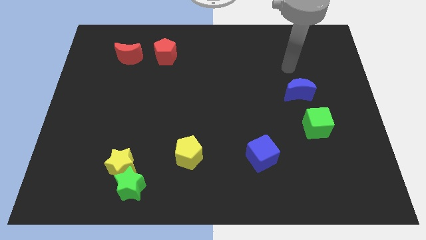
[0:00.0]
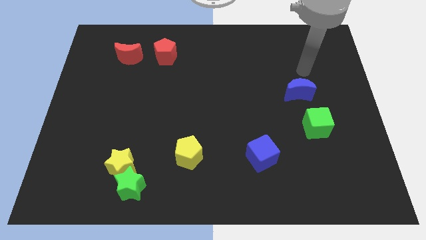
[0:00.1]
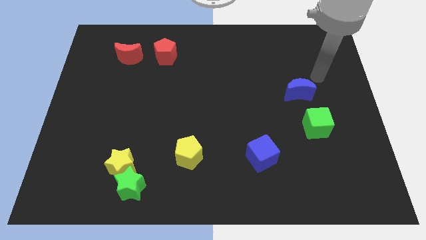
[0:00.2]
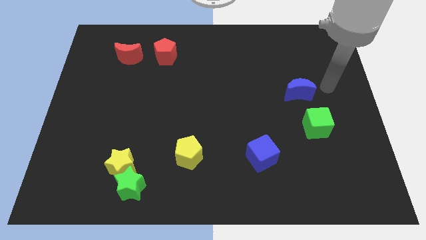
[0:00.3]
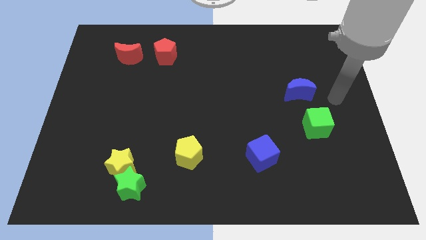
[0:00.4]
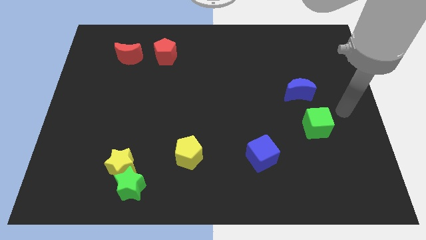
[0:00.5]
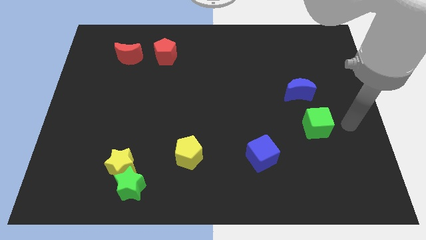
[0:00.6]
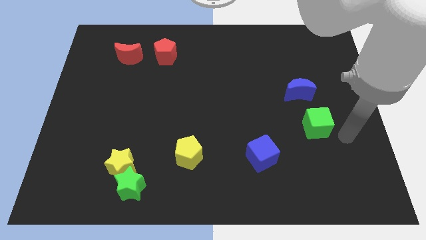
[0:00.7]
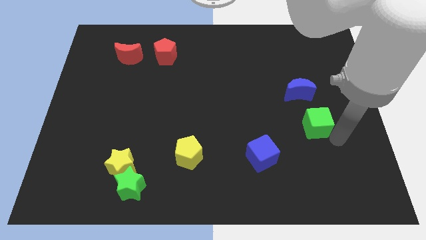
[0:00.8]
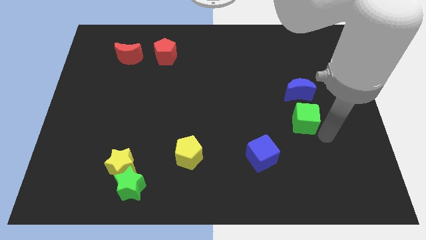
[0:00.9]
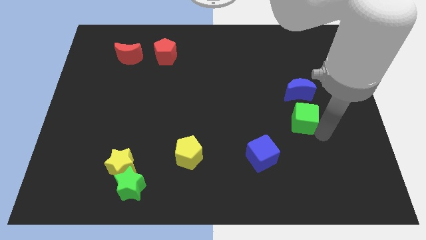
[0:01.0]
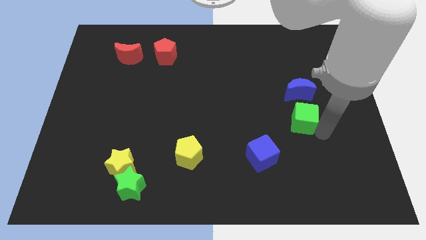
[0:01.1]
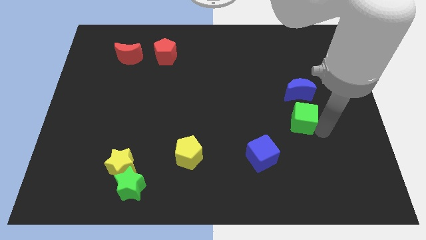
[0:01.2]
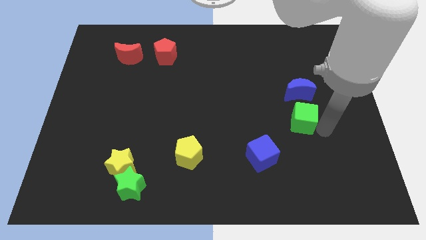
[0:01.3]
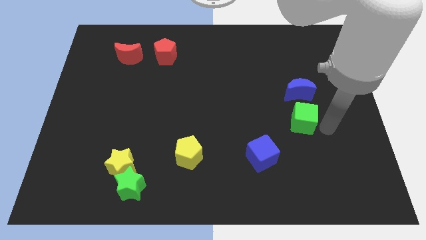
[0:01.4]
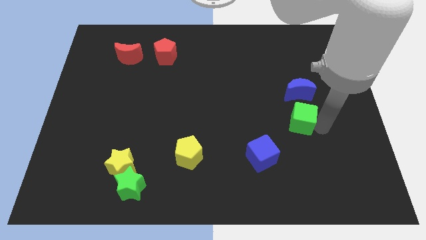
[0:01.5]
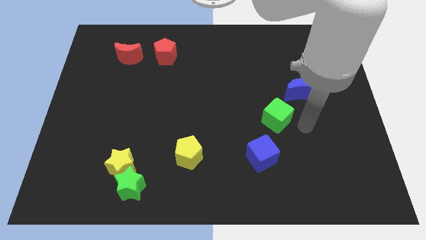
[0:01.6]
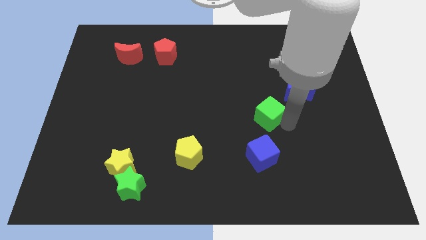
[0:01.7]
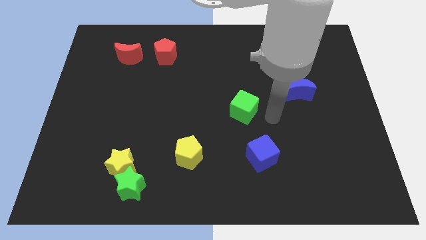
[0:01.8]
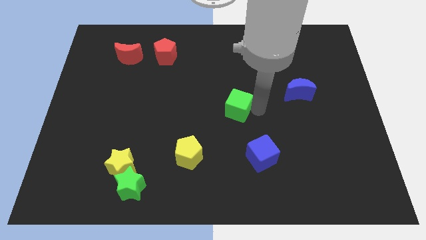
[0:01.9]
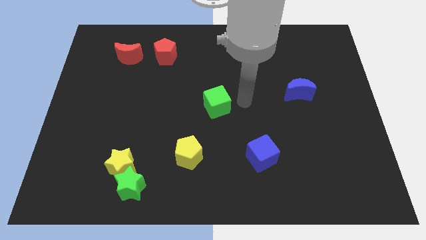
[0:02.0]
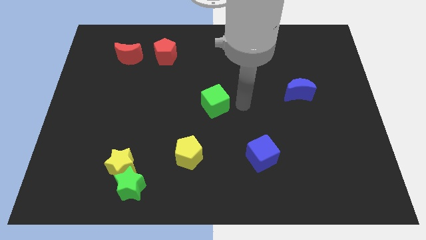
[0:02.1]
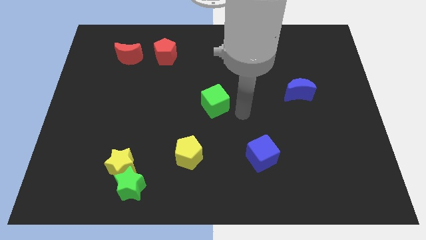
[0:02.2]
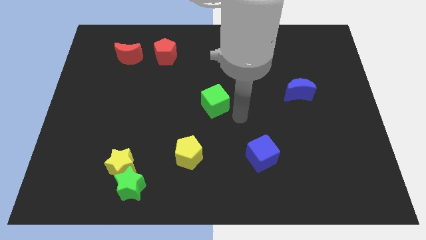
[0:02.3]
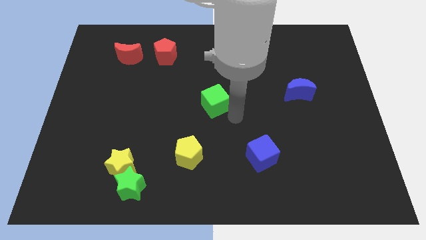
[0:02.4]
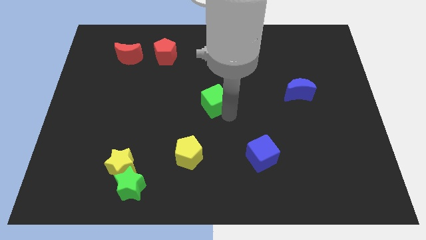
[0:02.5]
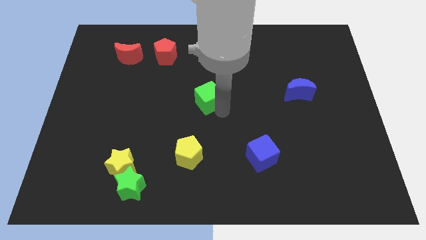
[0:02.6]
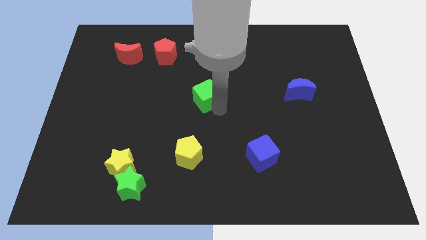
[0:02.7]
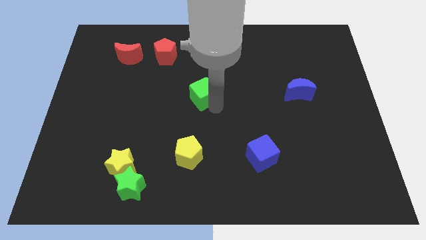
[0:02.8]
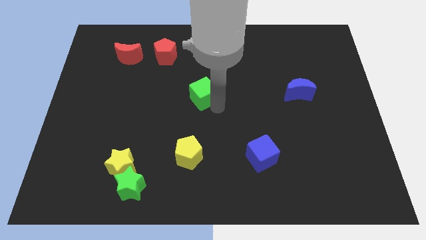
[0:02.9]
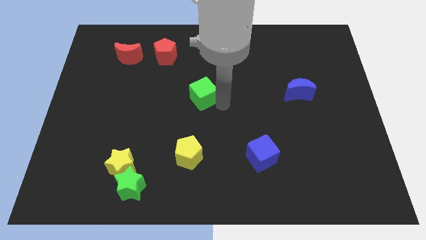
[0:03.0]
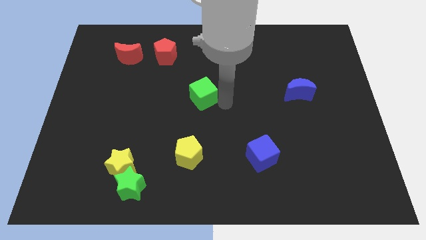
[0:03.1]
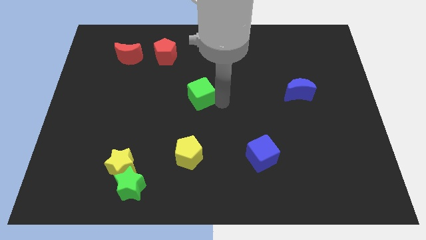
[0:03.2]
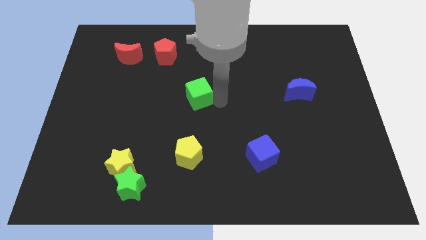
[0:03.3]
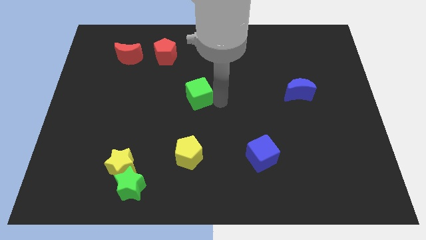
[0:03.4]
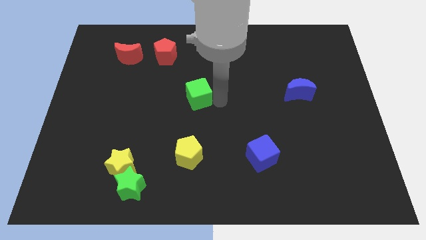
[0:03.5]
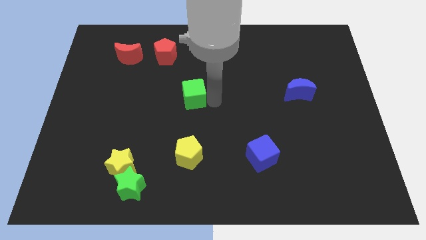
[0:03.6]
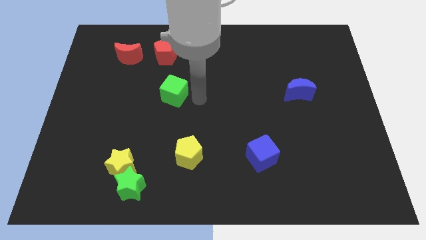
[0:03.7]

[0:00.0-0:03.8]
move green cube parallel to the blue moon

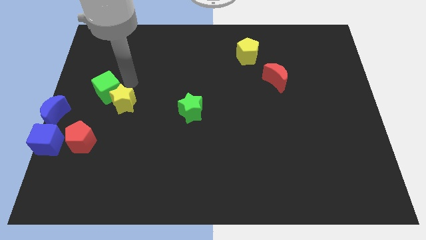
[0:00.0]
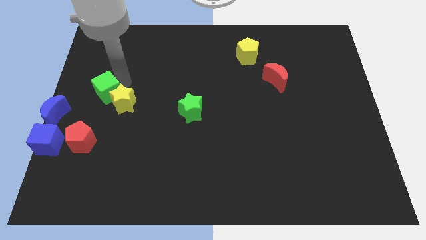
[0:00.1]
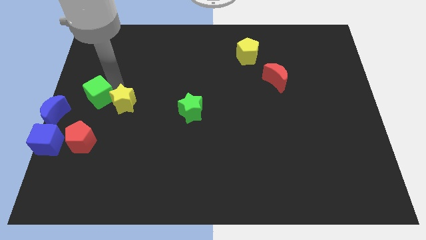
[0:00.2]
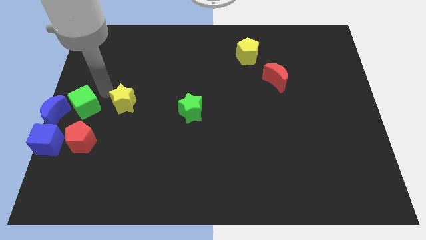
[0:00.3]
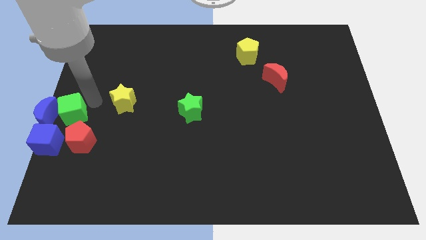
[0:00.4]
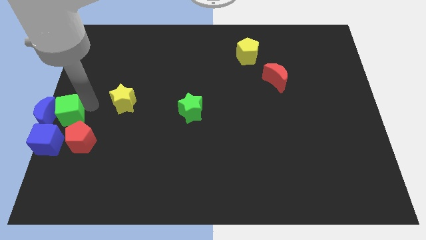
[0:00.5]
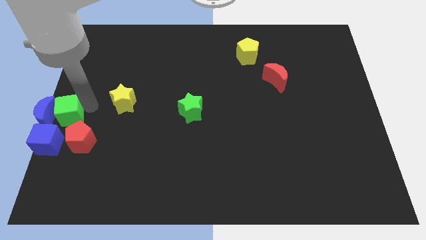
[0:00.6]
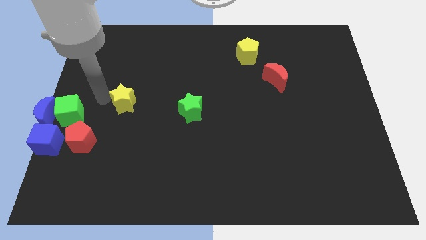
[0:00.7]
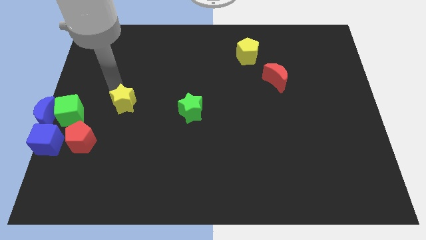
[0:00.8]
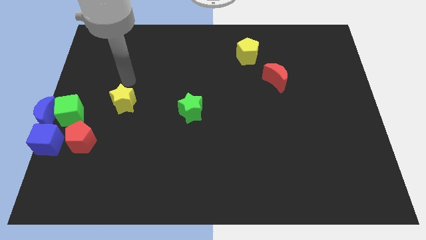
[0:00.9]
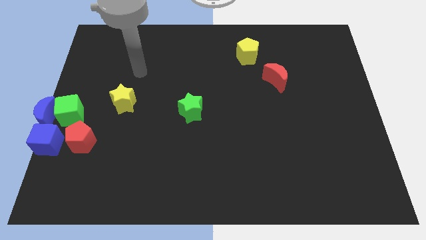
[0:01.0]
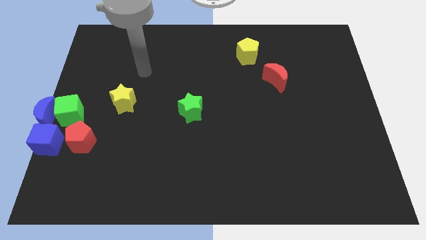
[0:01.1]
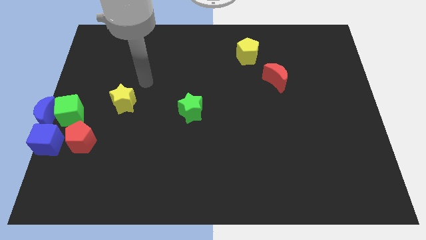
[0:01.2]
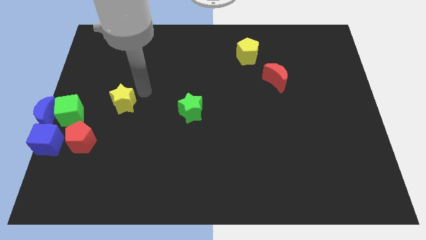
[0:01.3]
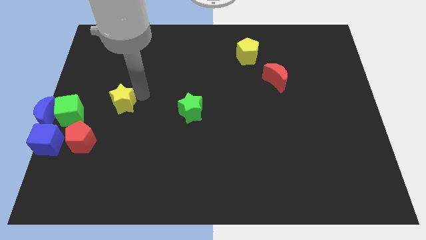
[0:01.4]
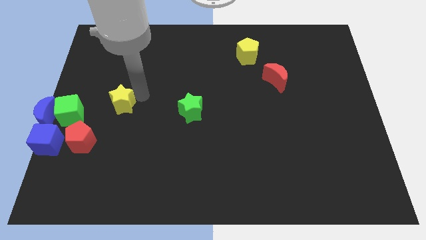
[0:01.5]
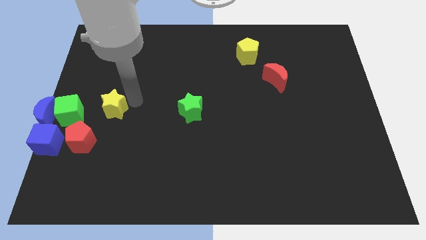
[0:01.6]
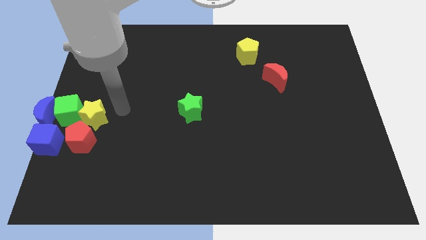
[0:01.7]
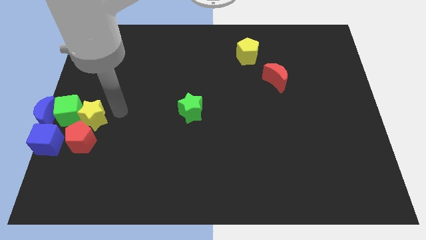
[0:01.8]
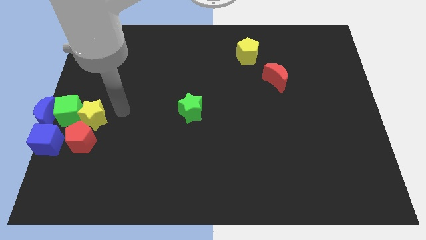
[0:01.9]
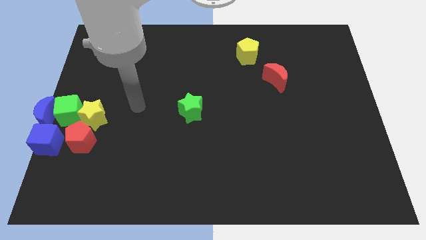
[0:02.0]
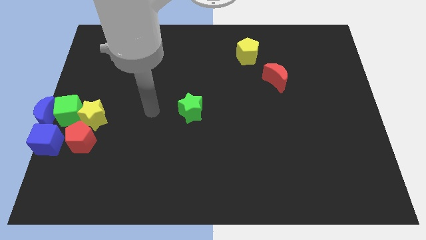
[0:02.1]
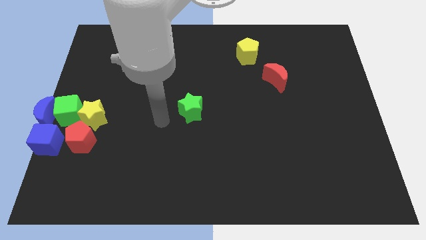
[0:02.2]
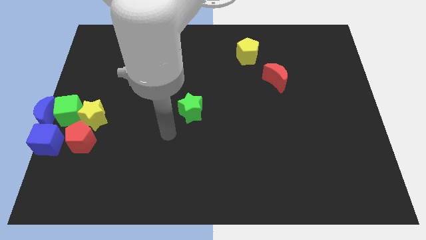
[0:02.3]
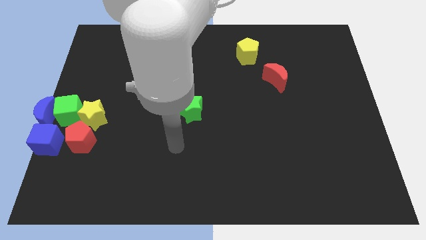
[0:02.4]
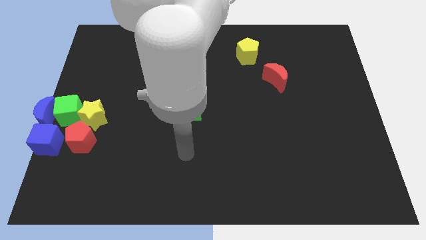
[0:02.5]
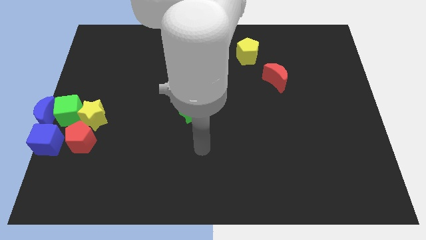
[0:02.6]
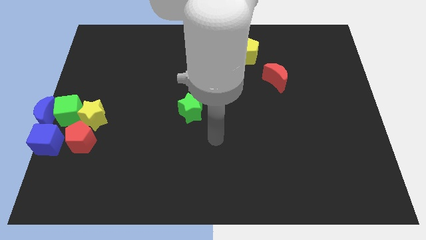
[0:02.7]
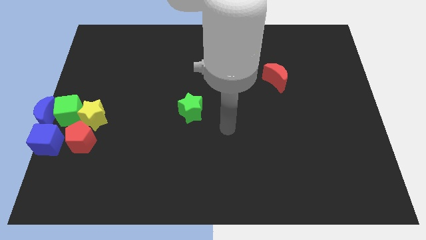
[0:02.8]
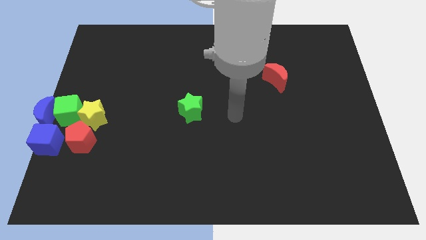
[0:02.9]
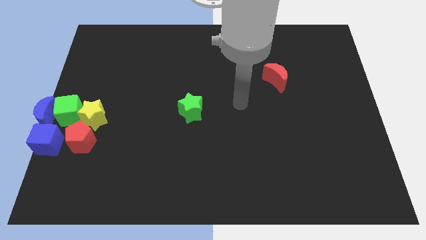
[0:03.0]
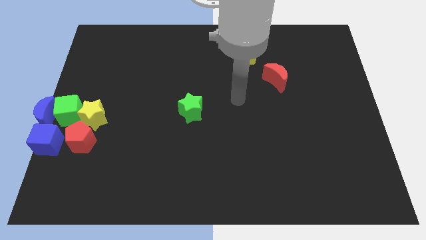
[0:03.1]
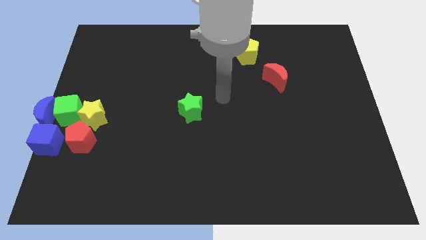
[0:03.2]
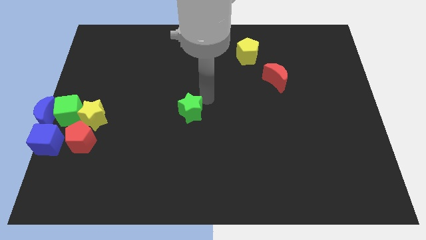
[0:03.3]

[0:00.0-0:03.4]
slide the green cube and the yellow star into the group of blocks

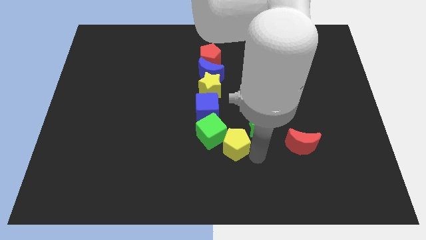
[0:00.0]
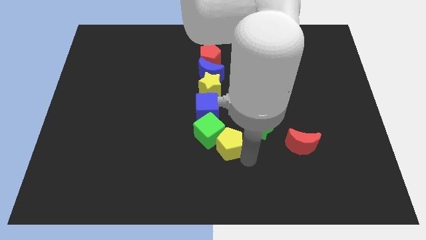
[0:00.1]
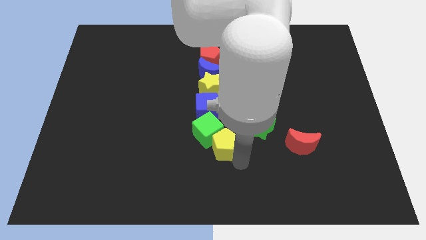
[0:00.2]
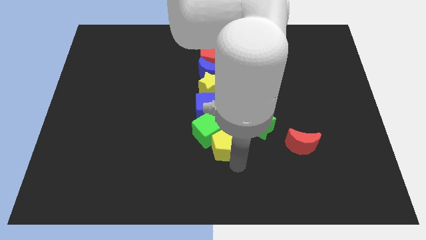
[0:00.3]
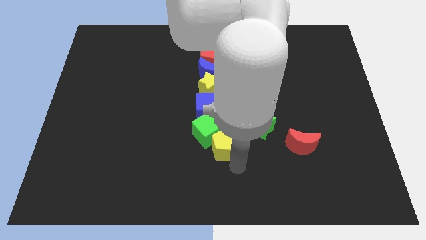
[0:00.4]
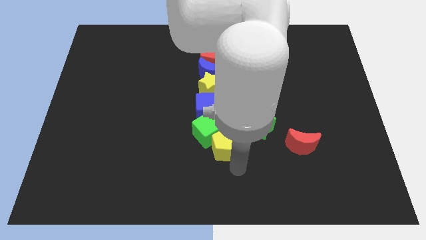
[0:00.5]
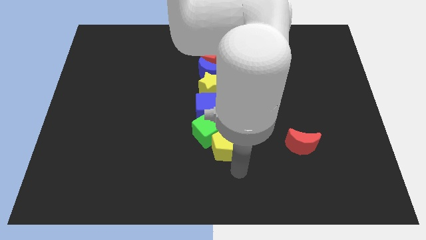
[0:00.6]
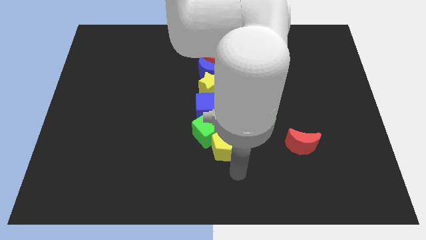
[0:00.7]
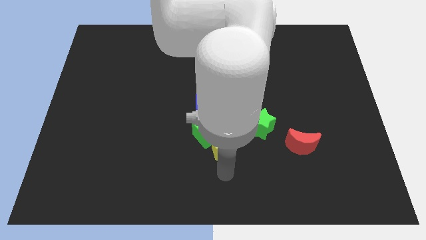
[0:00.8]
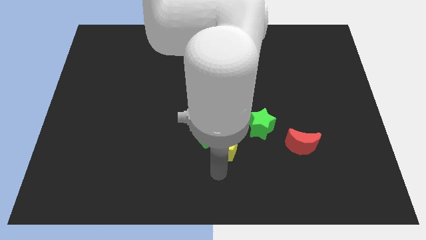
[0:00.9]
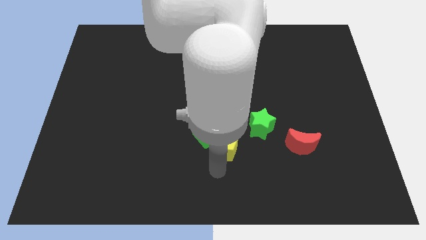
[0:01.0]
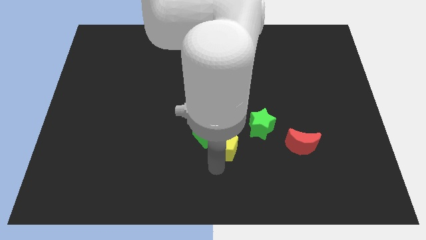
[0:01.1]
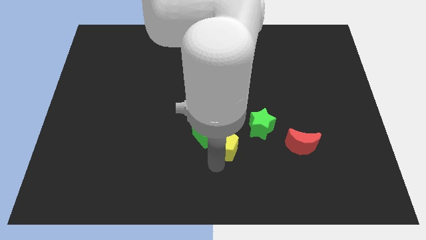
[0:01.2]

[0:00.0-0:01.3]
move the yellow pentagon close to the green cube

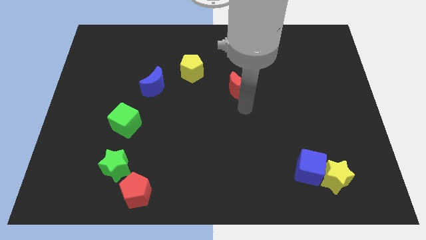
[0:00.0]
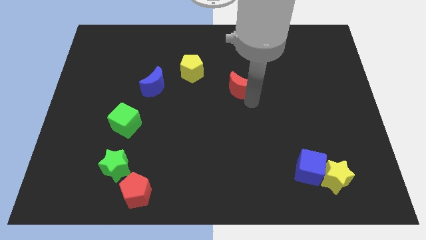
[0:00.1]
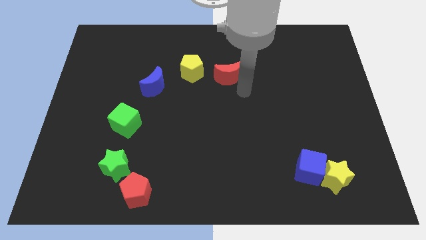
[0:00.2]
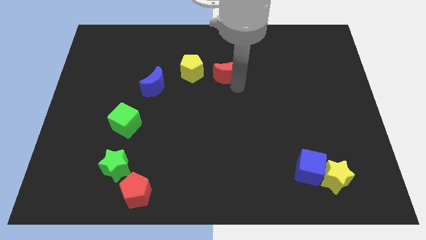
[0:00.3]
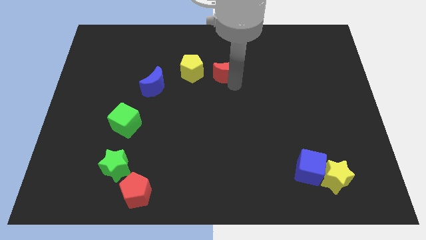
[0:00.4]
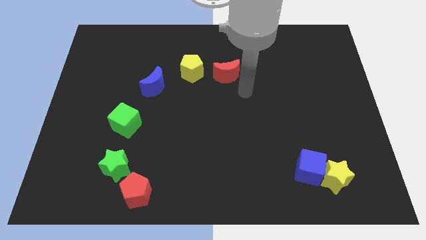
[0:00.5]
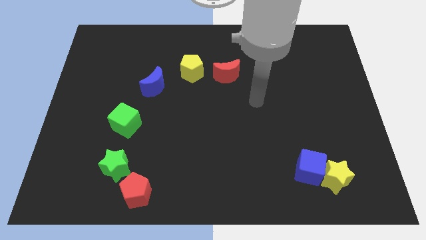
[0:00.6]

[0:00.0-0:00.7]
place the red moon close to the yellow pentagon
